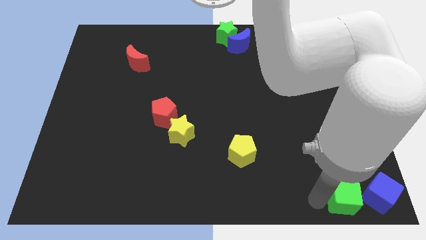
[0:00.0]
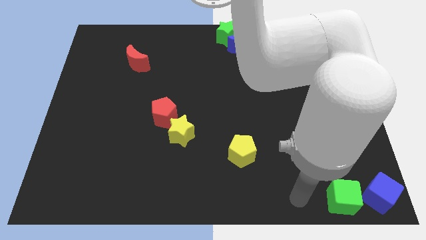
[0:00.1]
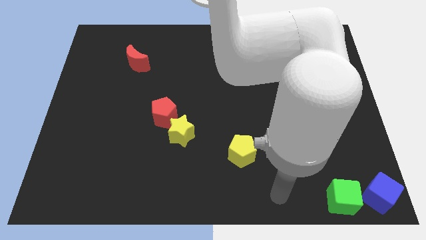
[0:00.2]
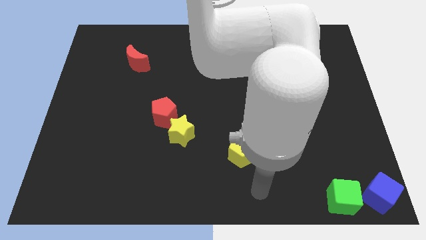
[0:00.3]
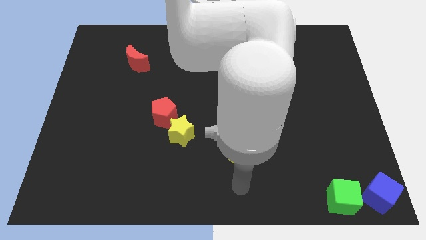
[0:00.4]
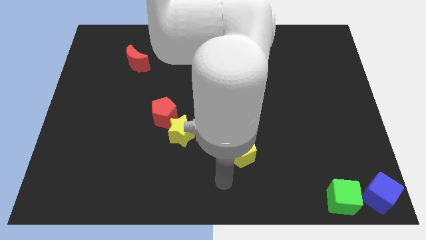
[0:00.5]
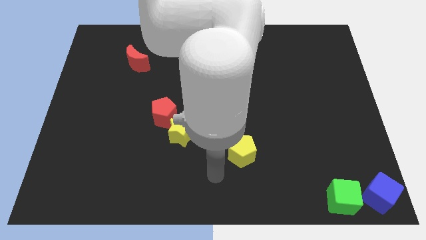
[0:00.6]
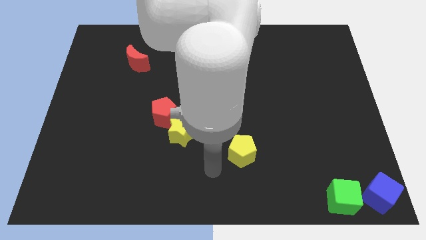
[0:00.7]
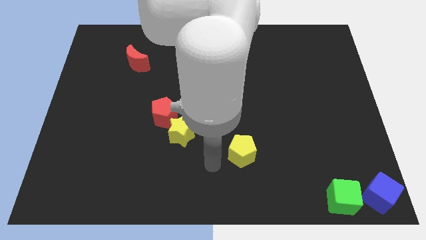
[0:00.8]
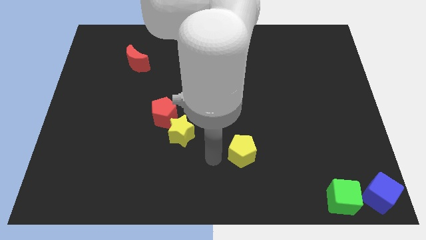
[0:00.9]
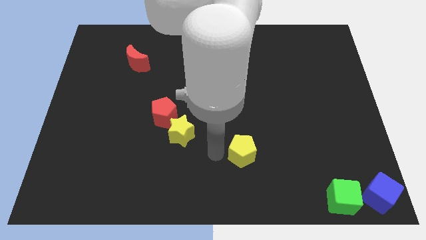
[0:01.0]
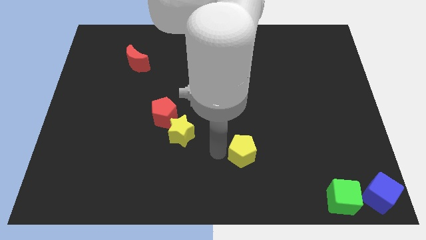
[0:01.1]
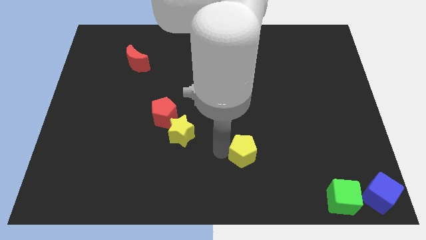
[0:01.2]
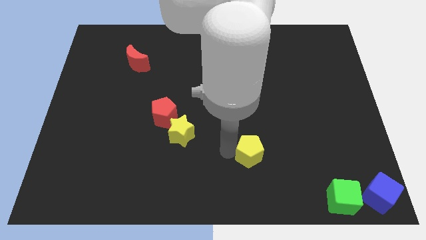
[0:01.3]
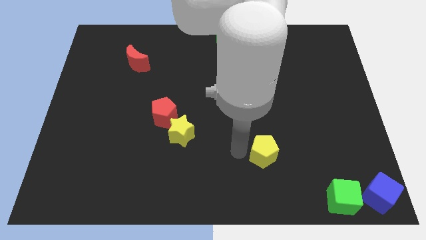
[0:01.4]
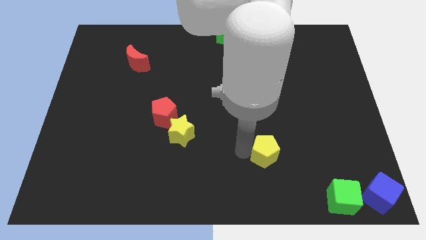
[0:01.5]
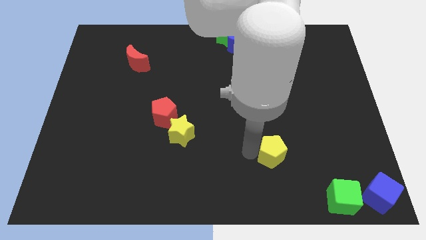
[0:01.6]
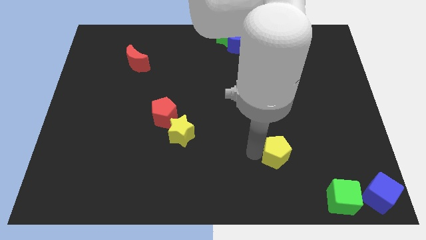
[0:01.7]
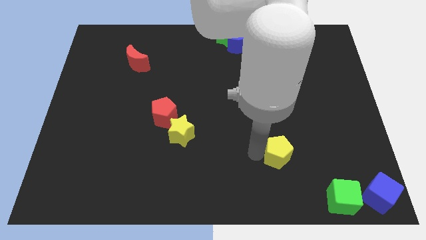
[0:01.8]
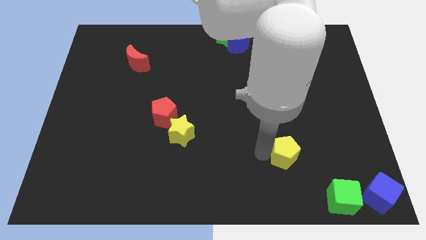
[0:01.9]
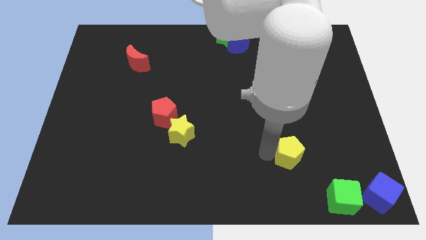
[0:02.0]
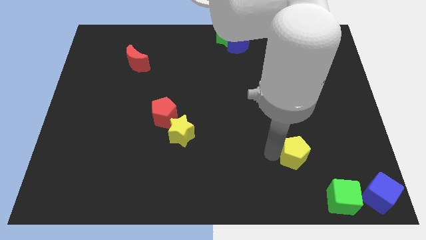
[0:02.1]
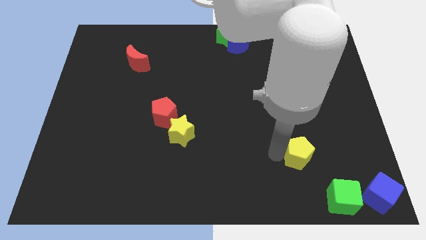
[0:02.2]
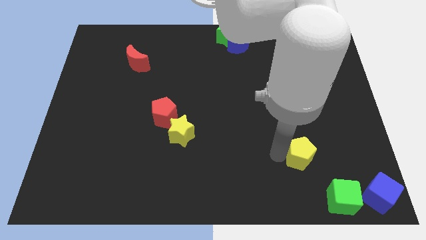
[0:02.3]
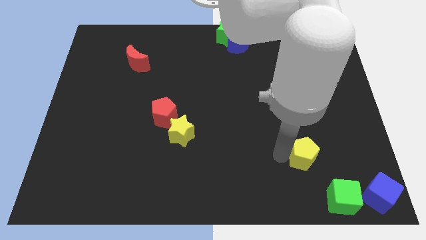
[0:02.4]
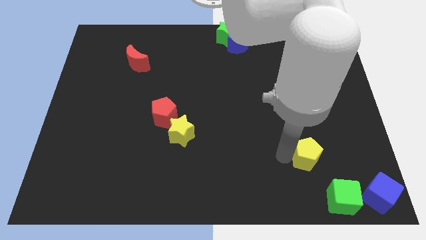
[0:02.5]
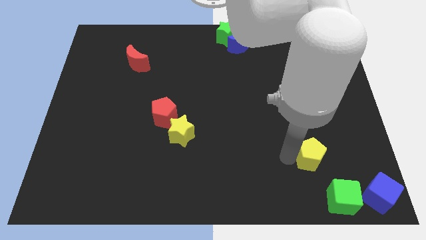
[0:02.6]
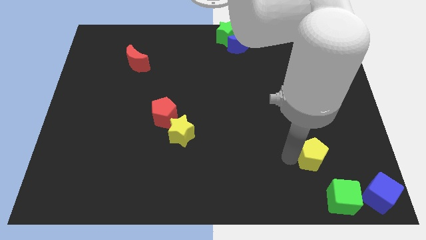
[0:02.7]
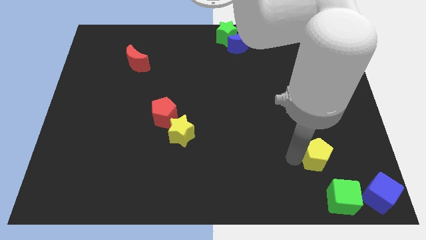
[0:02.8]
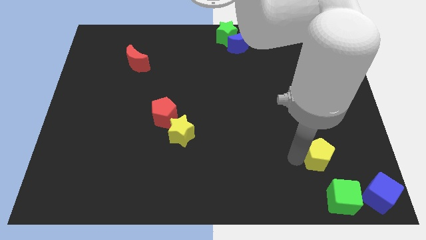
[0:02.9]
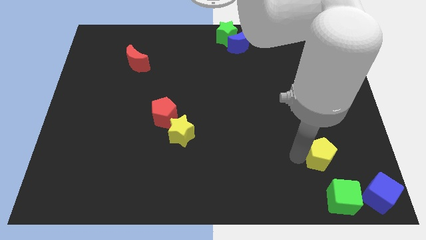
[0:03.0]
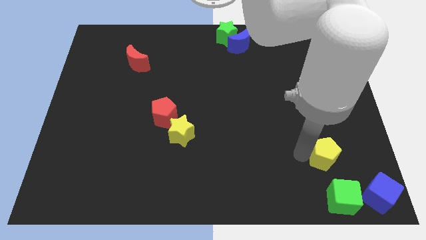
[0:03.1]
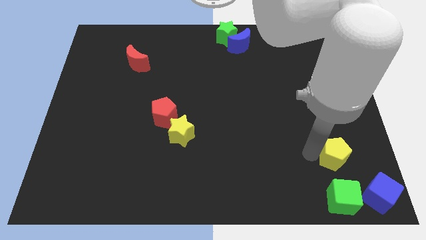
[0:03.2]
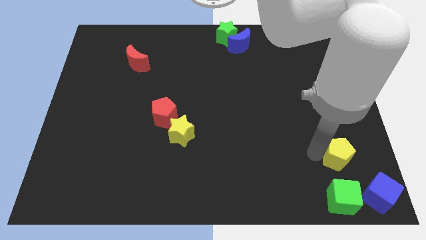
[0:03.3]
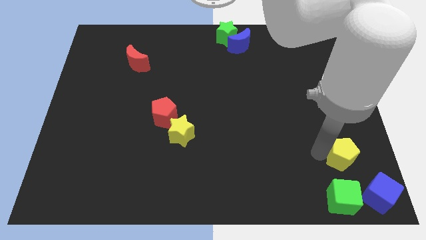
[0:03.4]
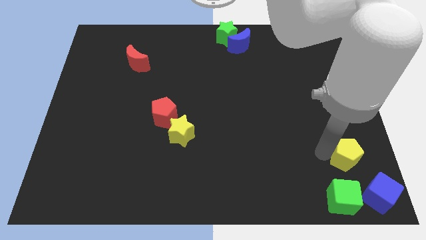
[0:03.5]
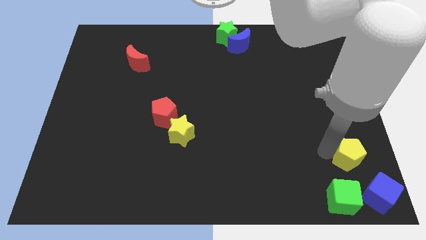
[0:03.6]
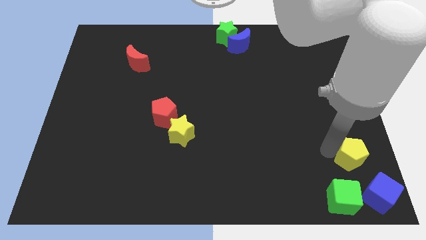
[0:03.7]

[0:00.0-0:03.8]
place the yellow pentagon at the top of green and blue cubes

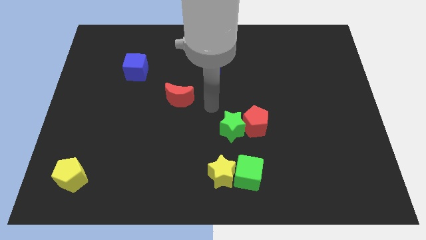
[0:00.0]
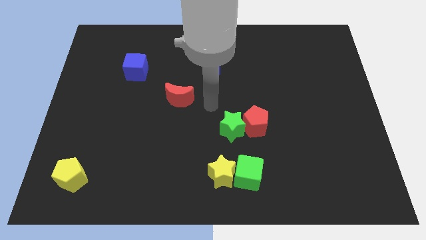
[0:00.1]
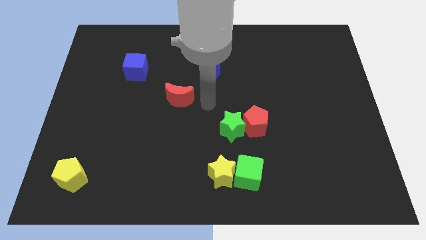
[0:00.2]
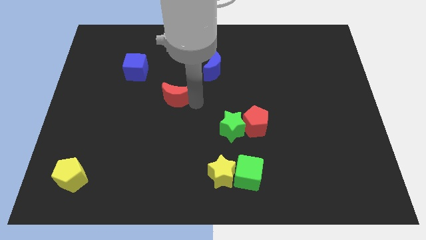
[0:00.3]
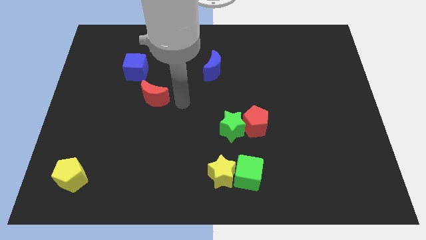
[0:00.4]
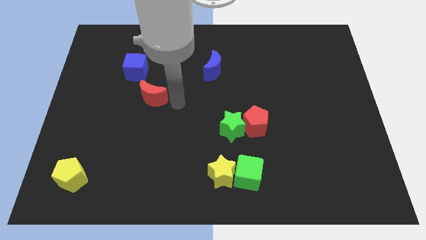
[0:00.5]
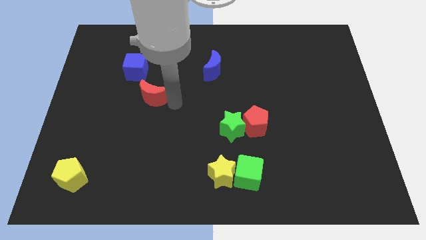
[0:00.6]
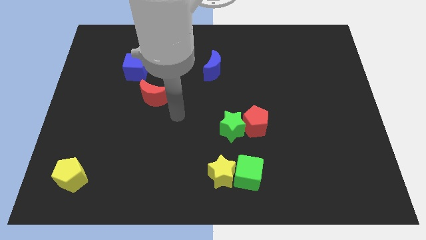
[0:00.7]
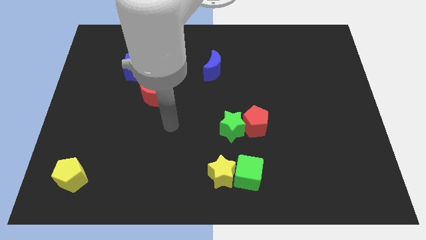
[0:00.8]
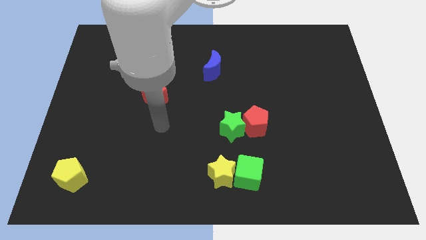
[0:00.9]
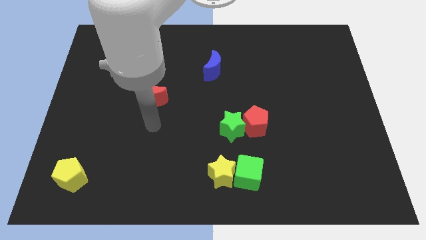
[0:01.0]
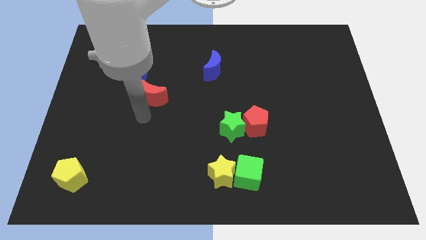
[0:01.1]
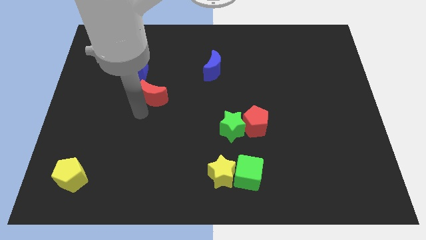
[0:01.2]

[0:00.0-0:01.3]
place the red crescent to the bottom right side of the blue cube

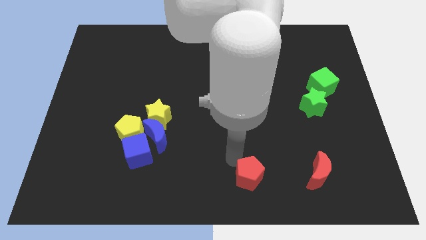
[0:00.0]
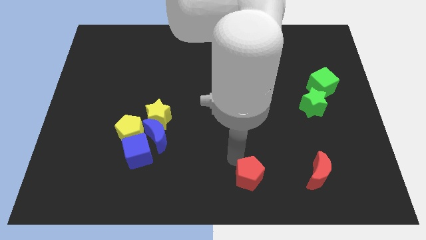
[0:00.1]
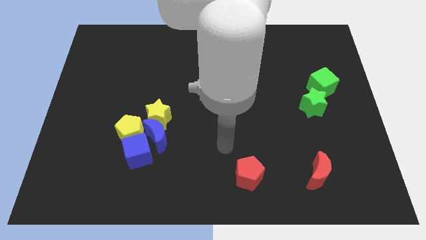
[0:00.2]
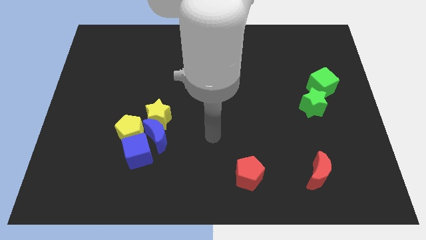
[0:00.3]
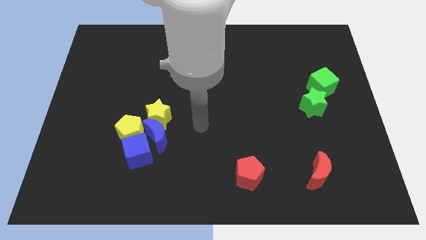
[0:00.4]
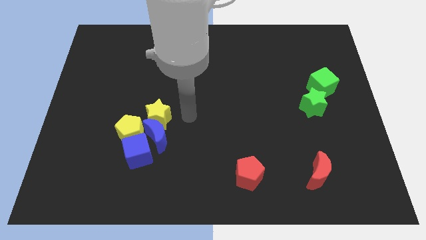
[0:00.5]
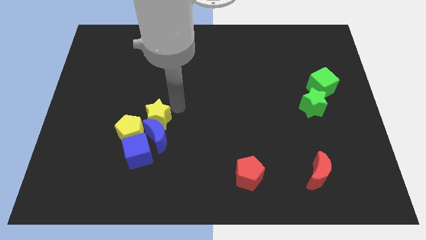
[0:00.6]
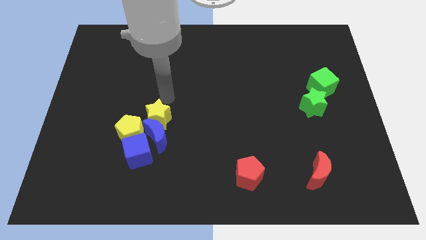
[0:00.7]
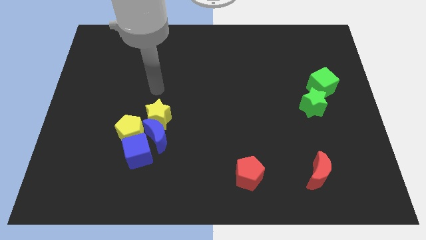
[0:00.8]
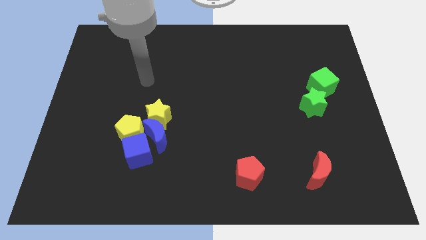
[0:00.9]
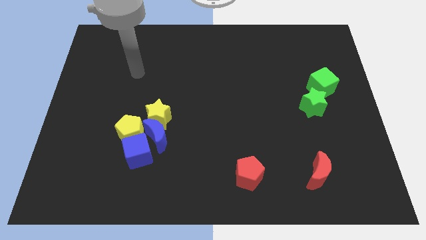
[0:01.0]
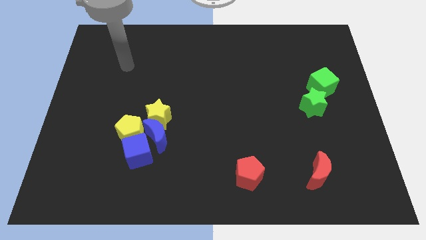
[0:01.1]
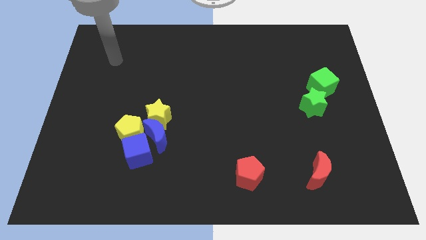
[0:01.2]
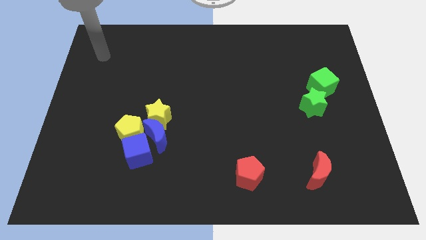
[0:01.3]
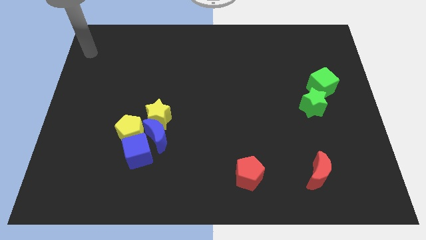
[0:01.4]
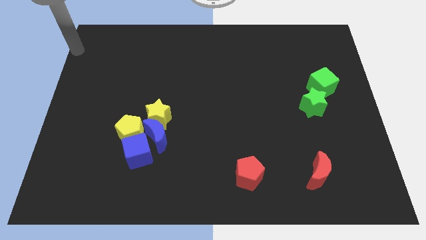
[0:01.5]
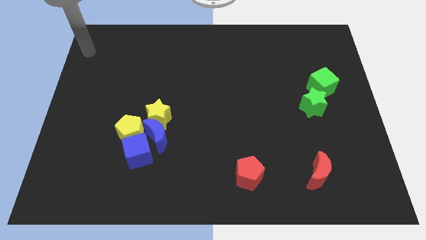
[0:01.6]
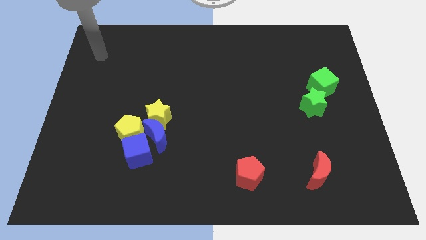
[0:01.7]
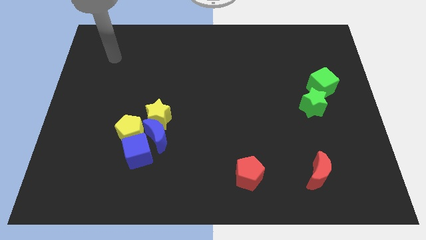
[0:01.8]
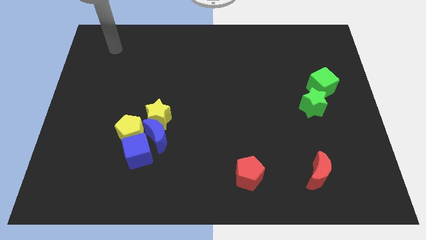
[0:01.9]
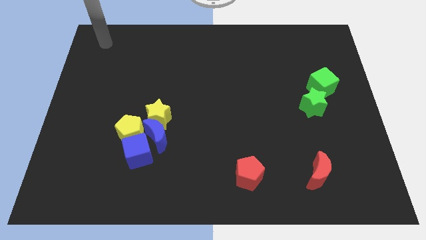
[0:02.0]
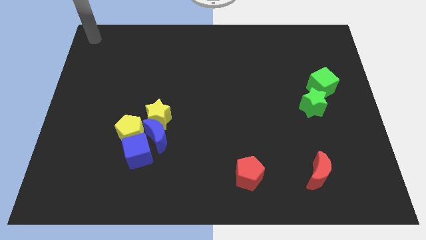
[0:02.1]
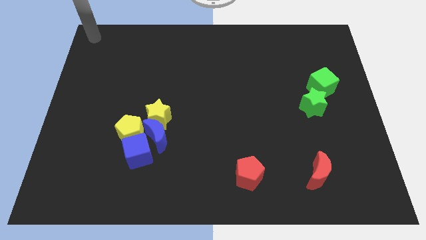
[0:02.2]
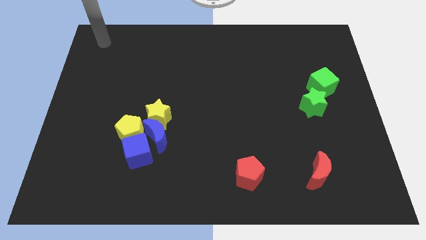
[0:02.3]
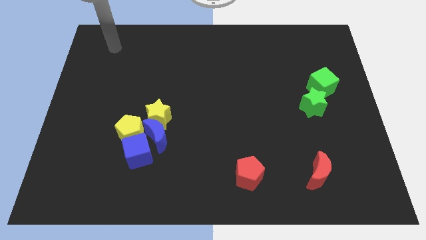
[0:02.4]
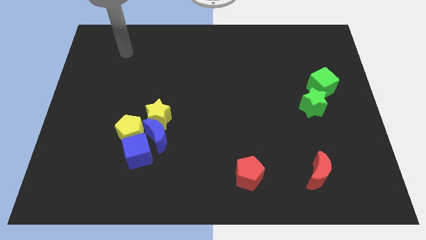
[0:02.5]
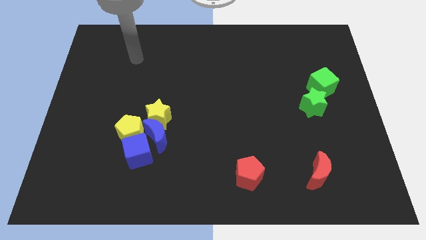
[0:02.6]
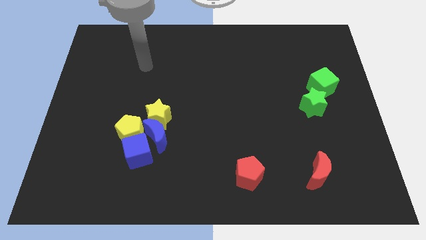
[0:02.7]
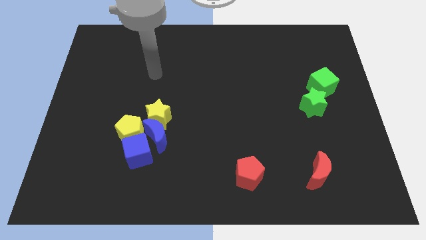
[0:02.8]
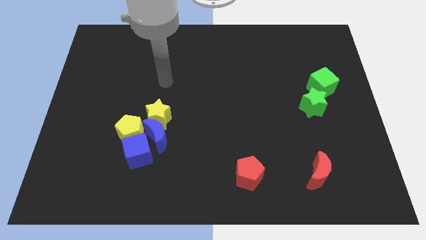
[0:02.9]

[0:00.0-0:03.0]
place your arm at the top of the yellow star

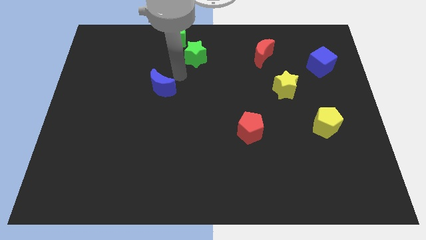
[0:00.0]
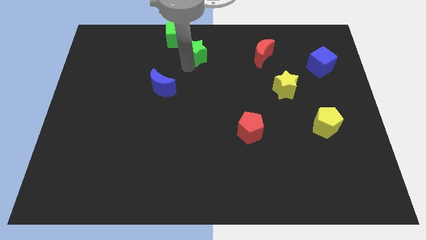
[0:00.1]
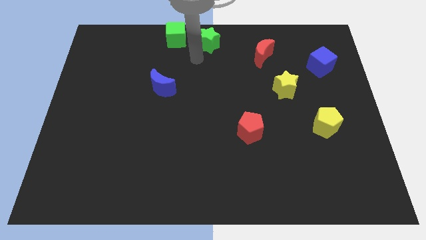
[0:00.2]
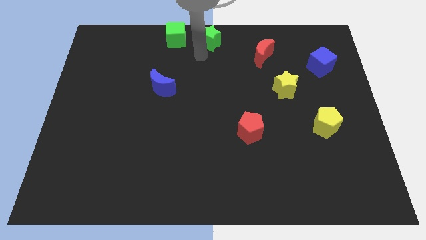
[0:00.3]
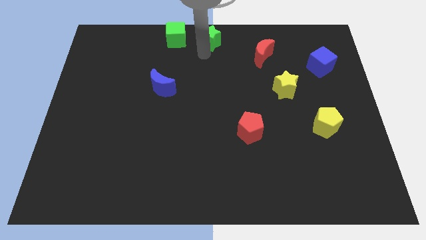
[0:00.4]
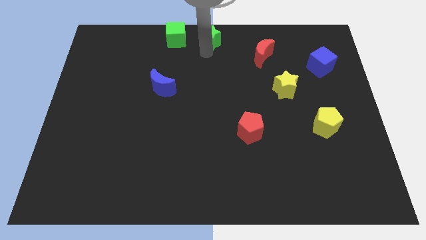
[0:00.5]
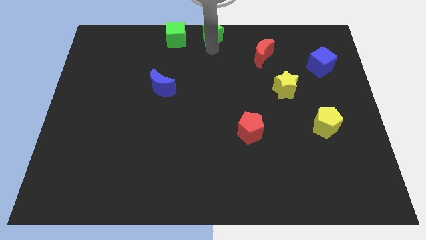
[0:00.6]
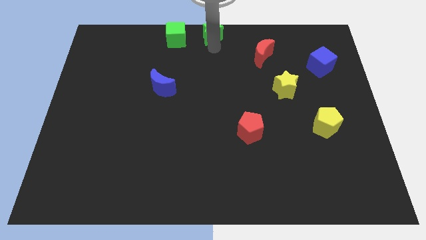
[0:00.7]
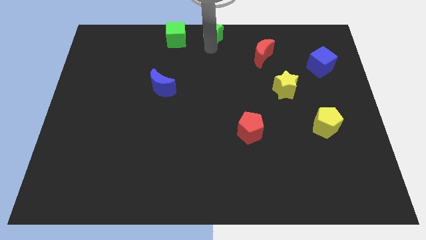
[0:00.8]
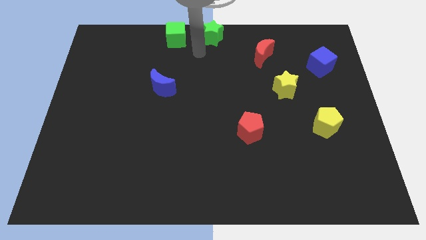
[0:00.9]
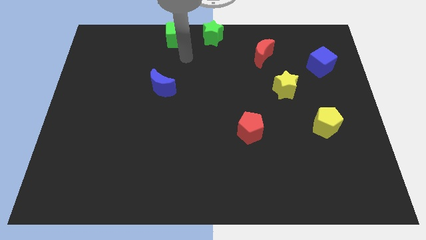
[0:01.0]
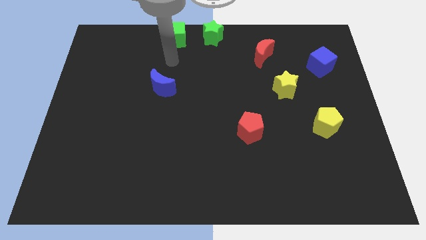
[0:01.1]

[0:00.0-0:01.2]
push the green star to the top center of the board
